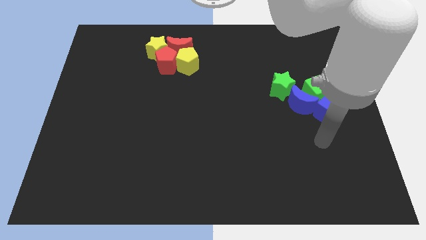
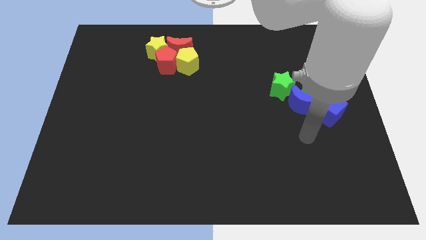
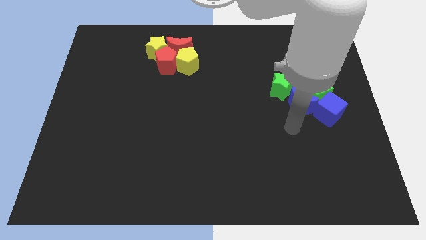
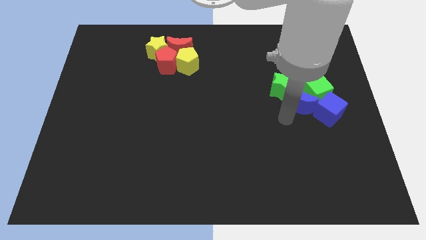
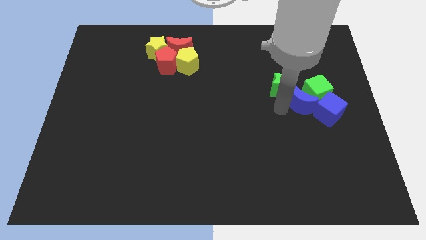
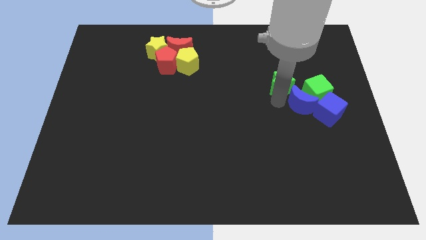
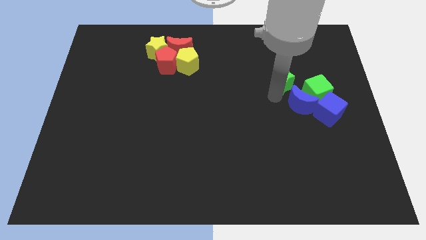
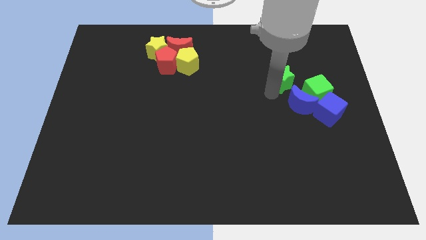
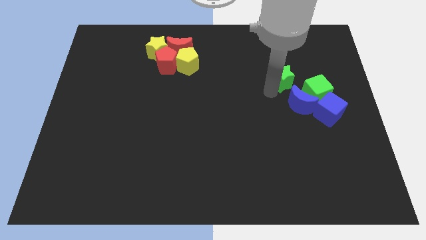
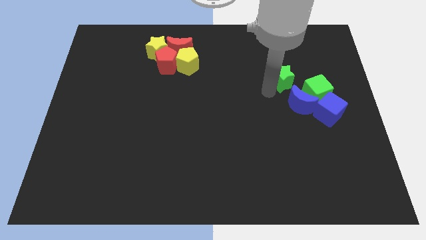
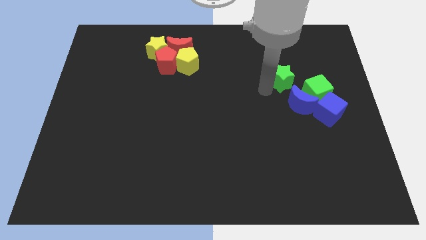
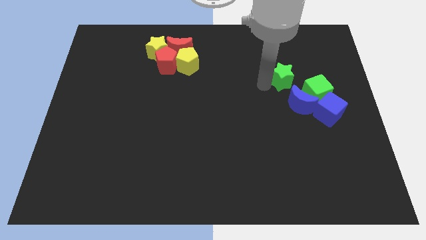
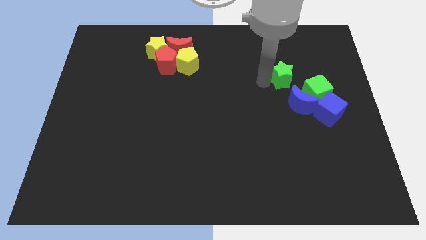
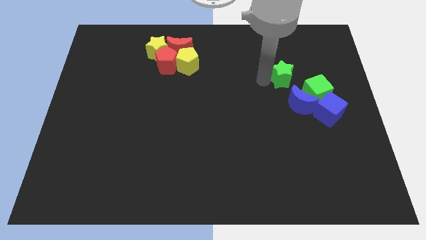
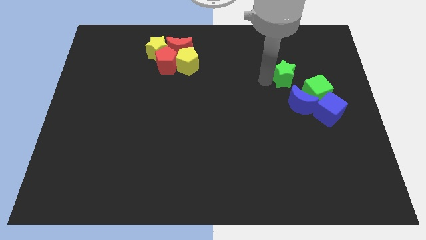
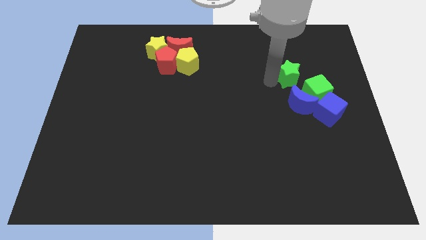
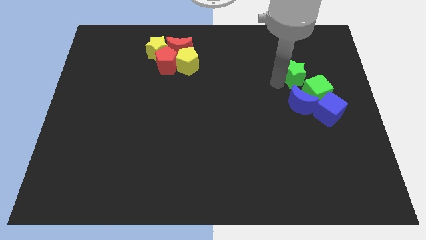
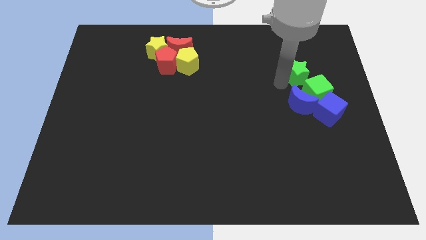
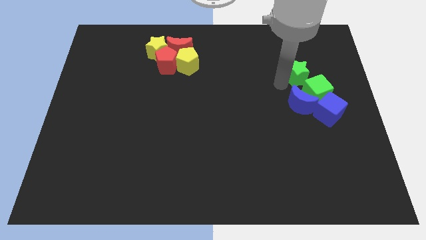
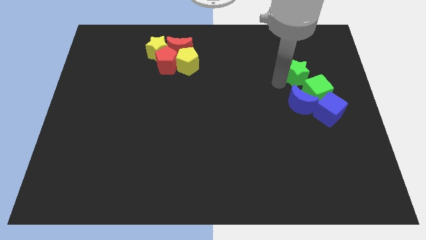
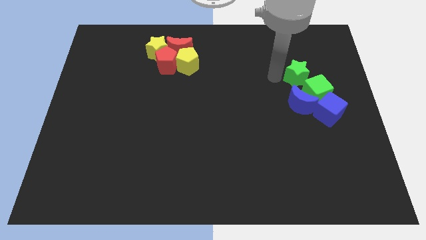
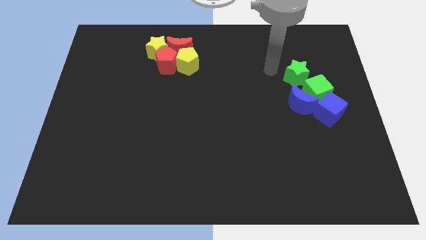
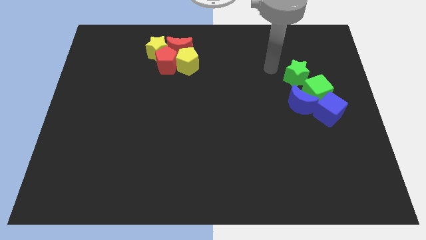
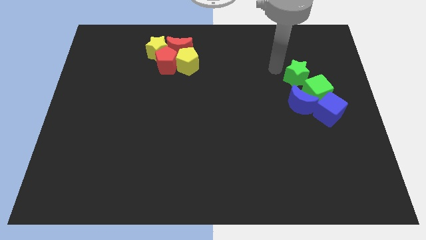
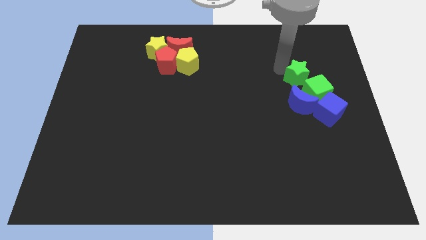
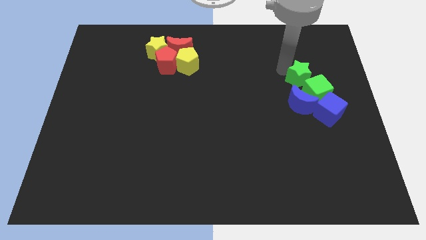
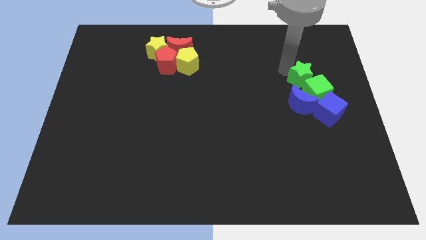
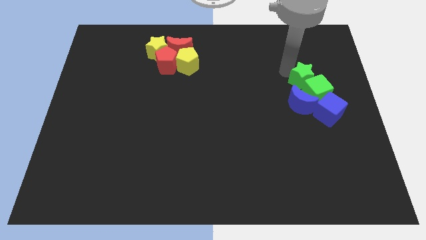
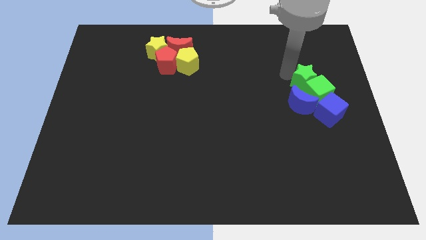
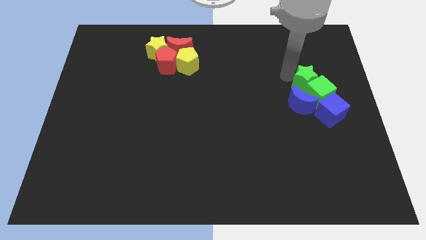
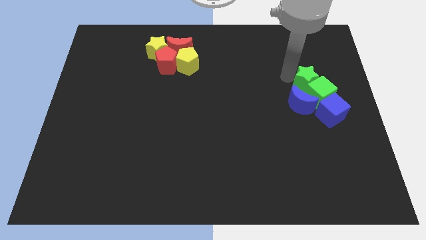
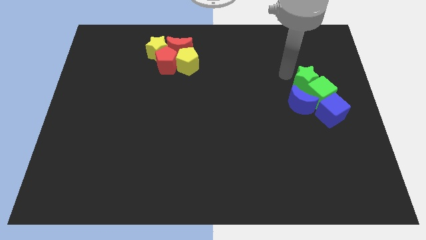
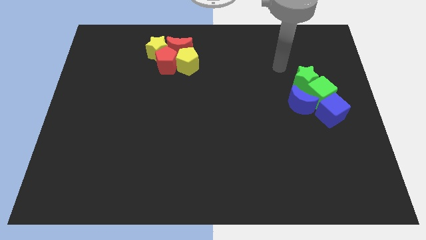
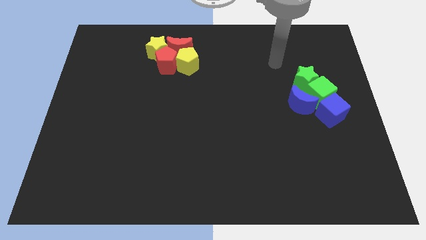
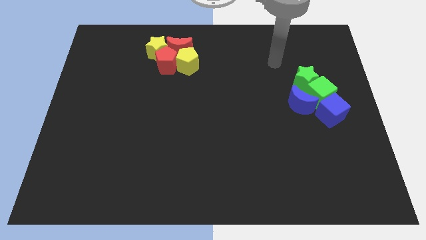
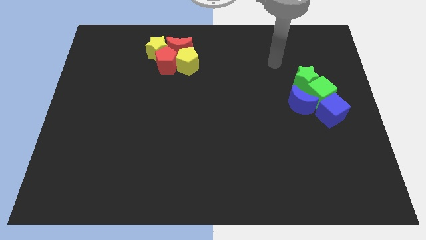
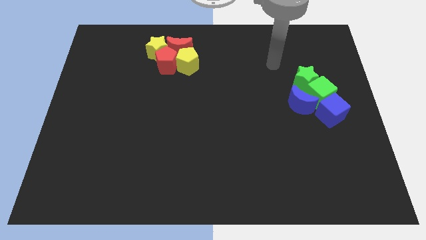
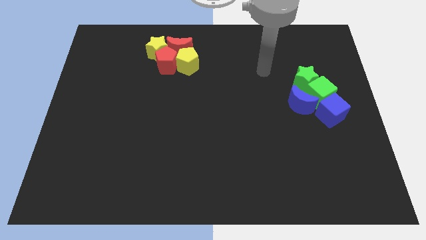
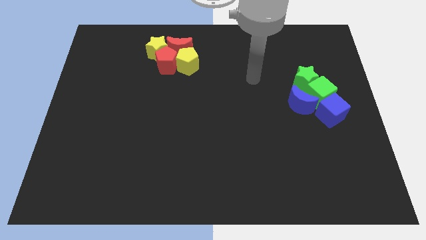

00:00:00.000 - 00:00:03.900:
push the green star into green cube

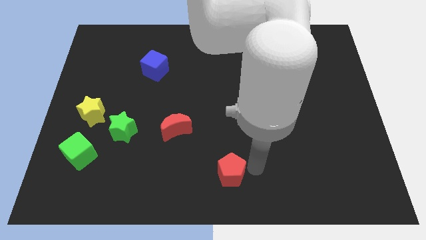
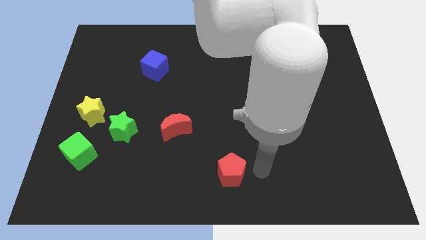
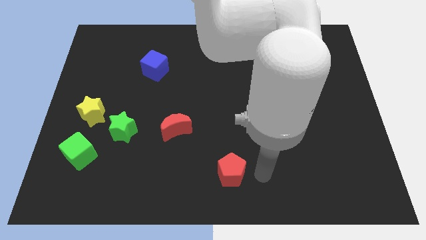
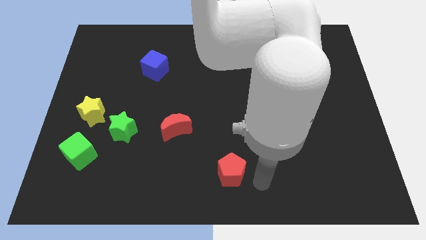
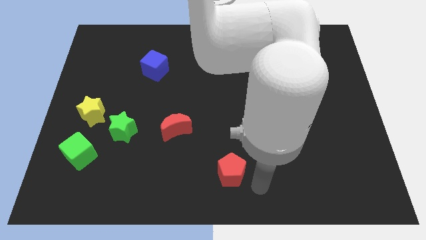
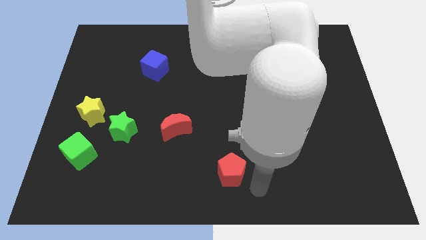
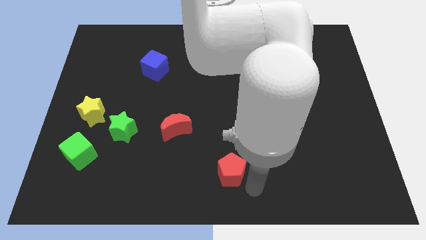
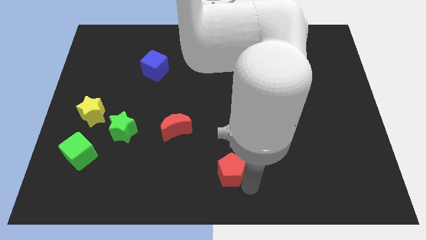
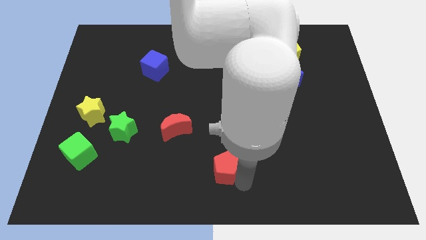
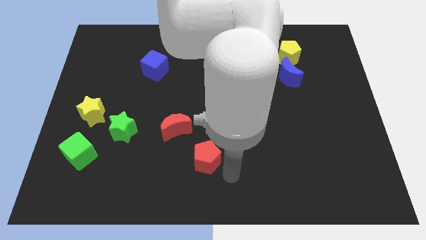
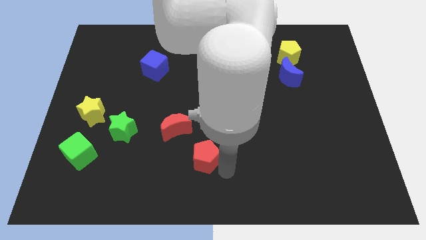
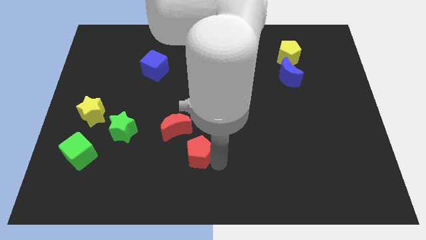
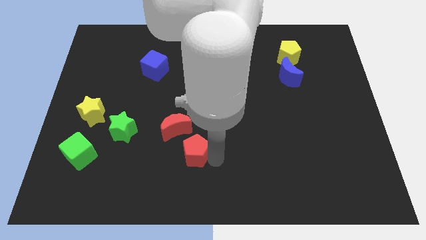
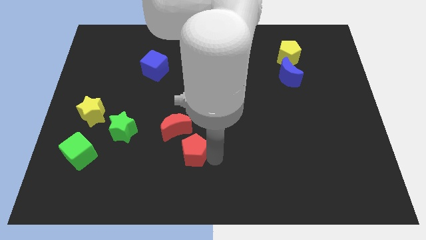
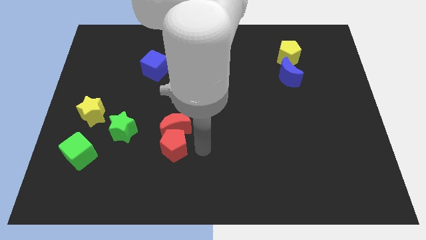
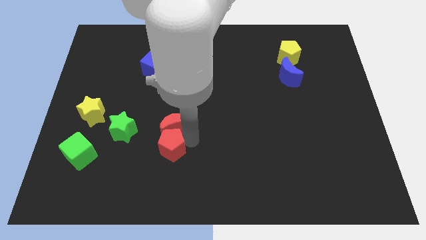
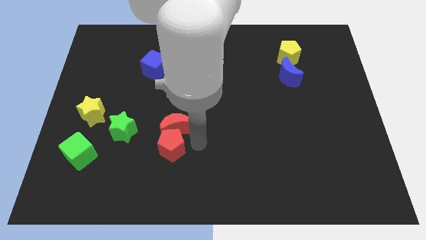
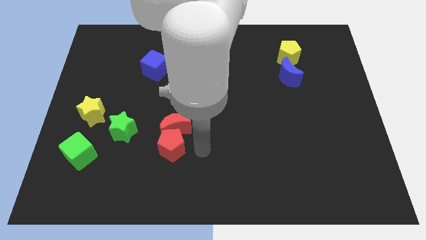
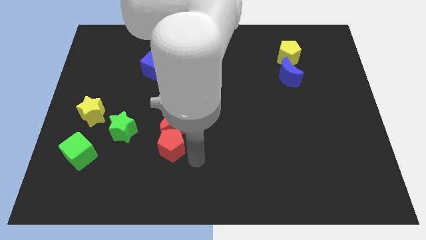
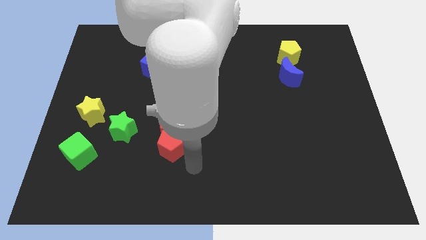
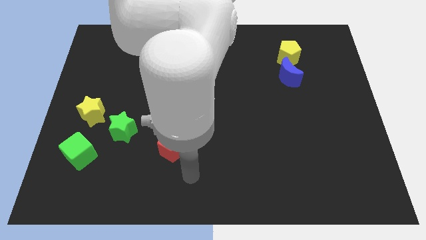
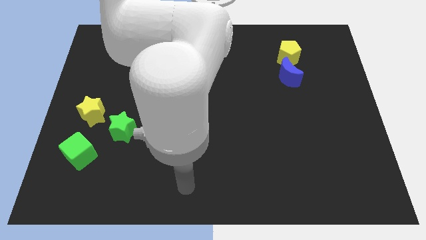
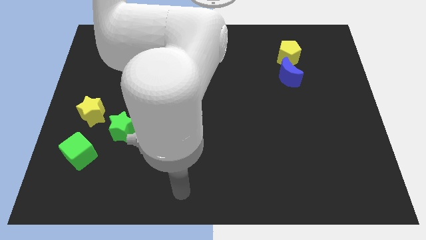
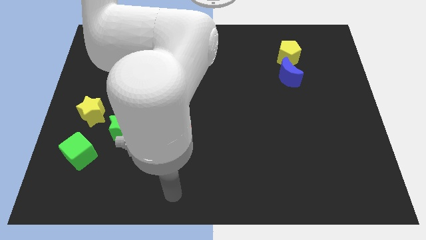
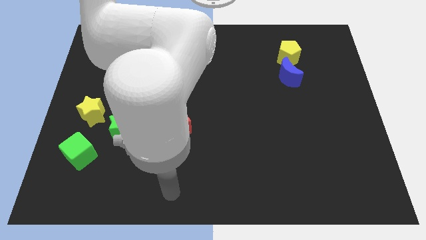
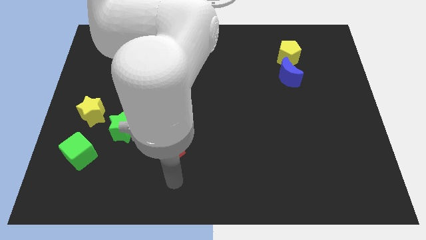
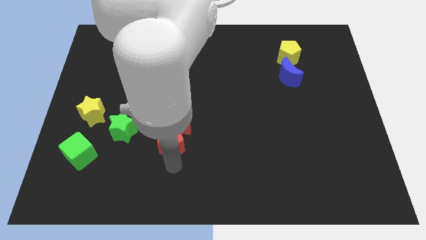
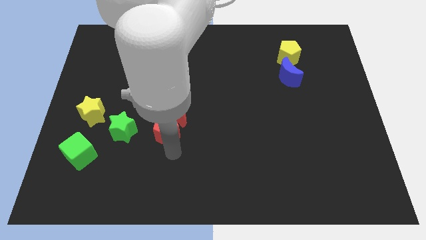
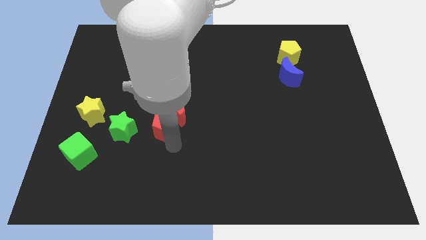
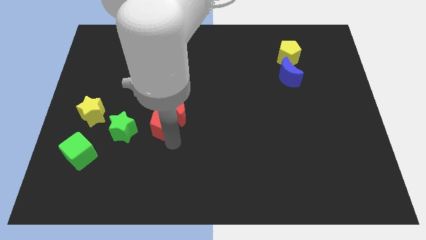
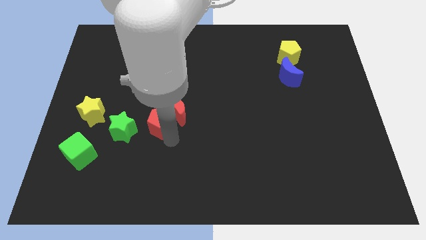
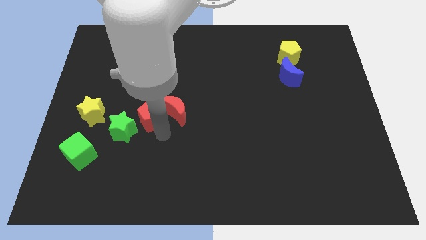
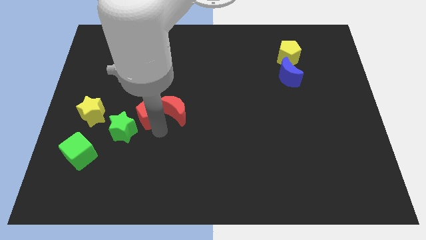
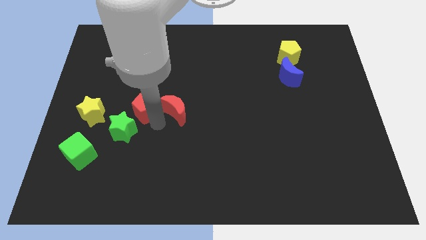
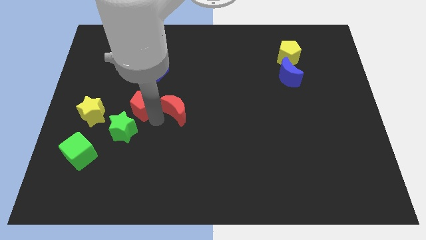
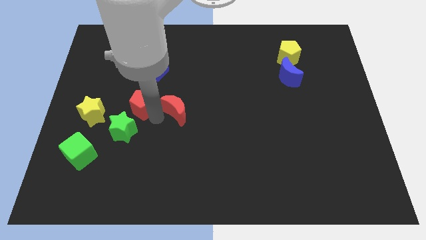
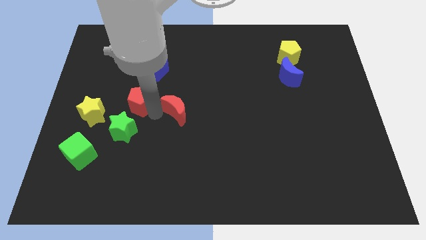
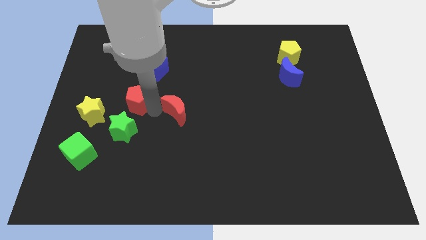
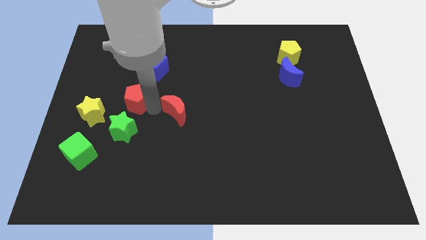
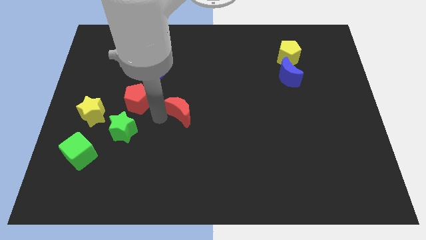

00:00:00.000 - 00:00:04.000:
place the red pentagon below the blue cube

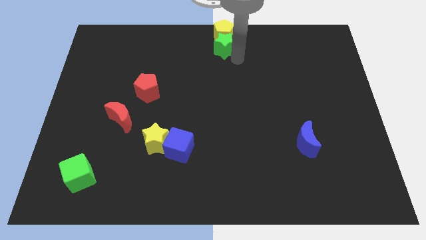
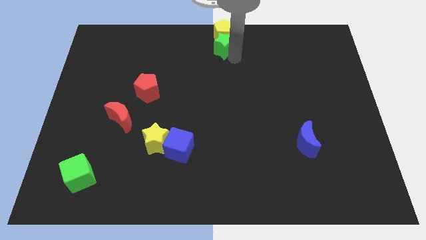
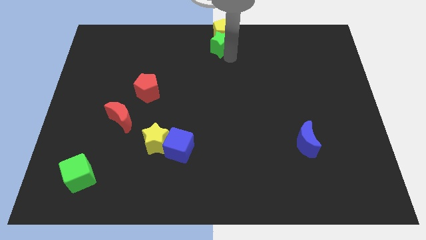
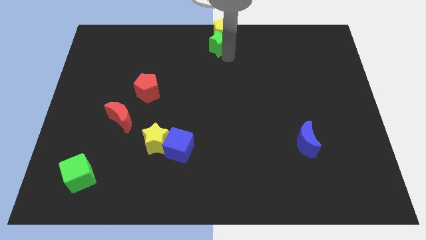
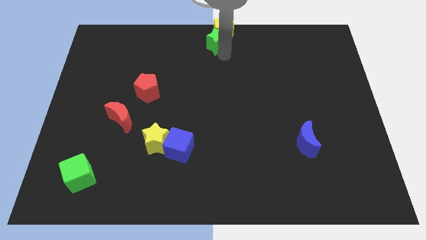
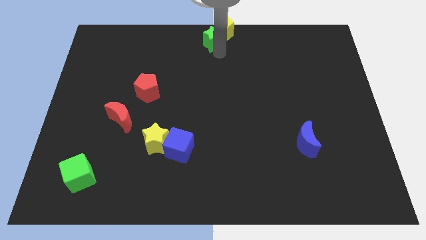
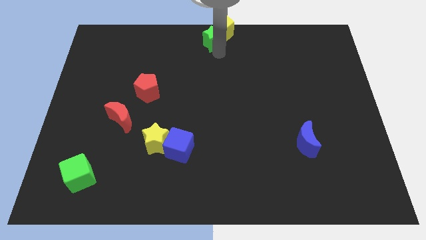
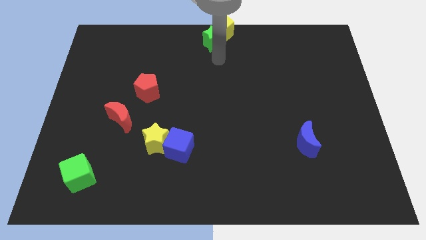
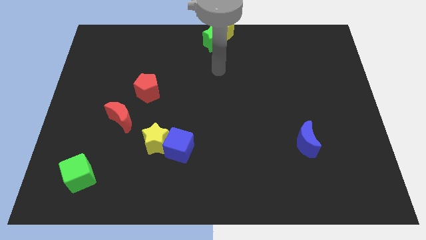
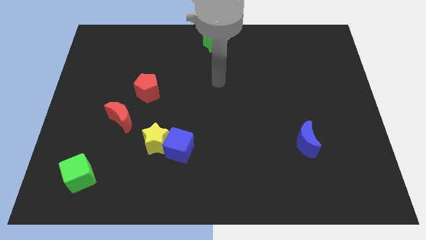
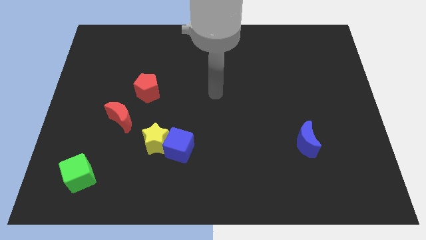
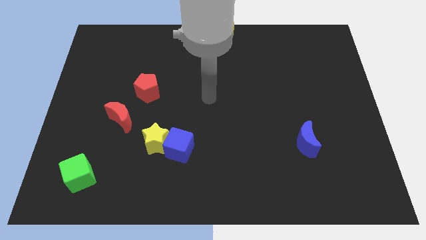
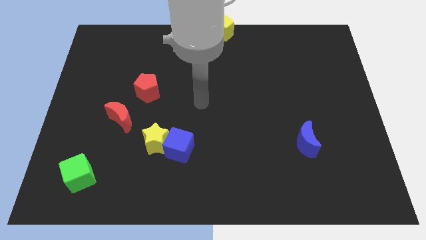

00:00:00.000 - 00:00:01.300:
push the green star towards the left side of the yellow pentagon
